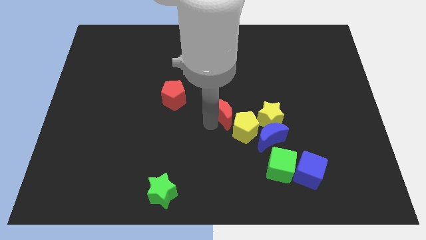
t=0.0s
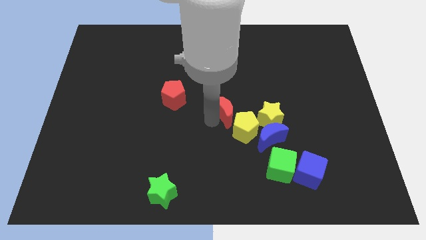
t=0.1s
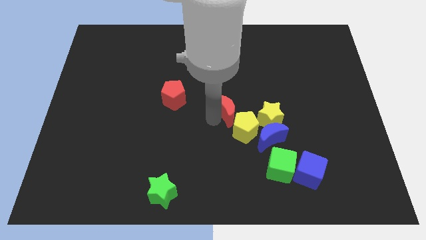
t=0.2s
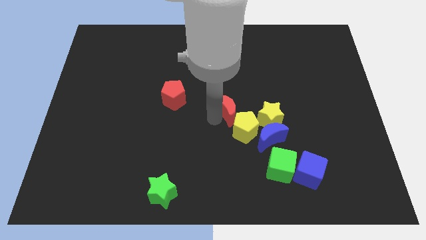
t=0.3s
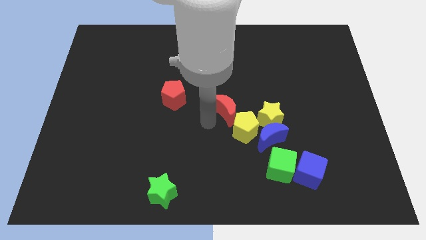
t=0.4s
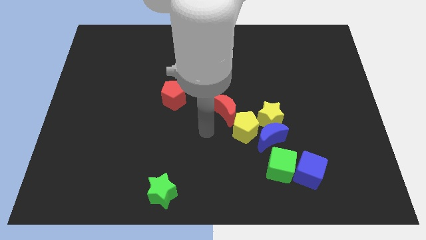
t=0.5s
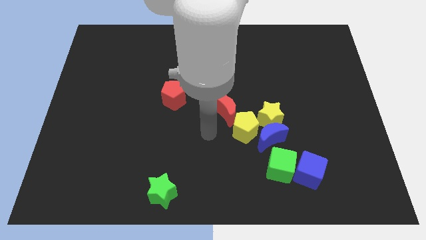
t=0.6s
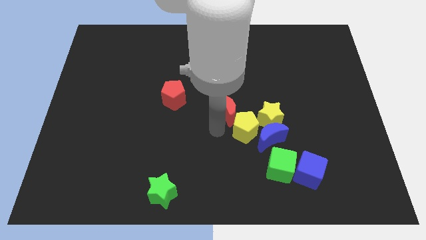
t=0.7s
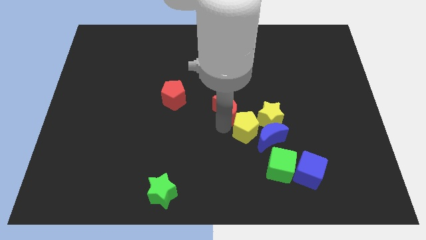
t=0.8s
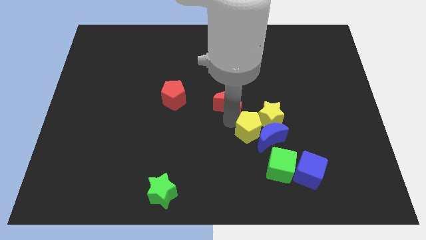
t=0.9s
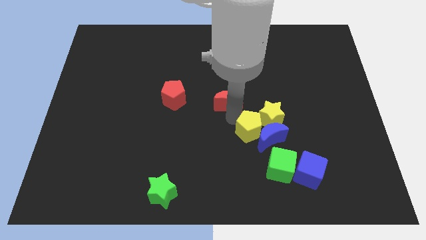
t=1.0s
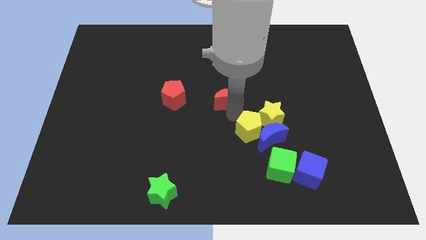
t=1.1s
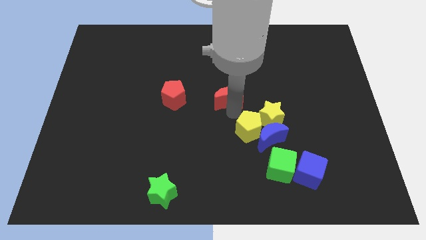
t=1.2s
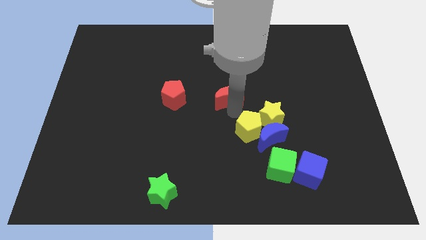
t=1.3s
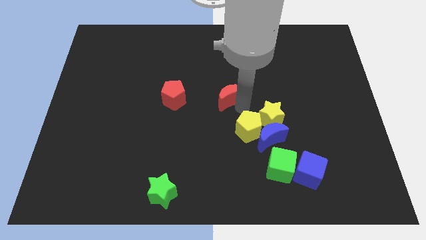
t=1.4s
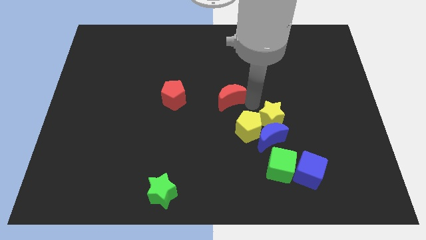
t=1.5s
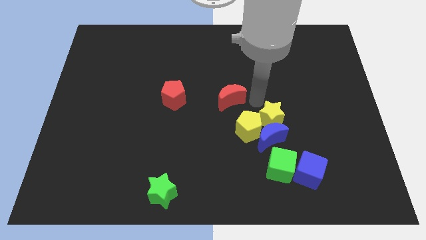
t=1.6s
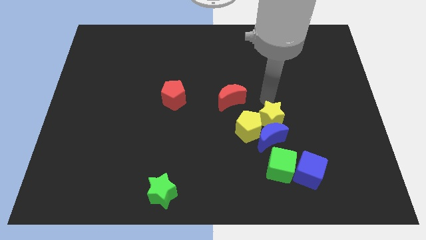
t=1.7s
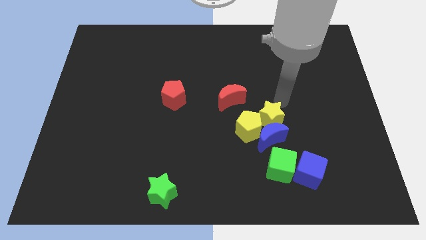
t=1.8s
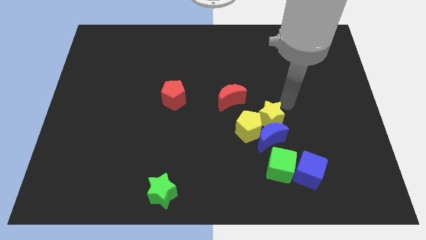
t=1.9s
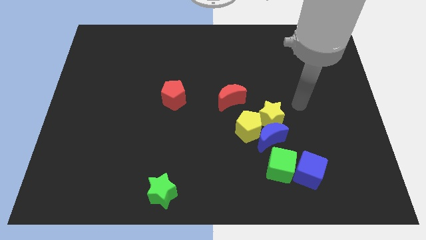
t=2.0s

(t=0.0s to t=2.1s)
slide red moon to the right of red pentagon

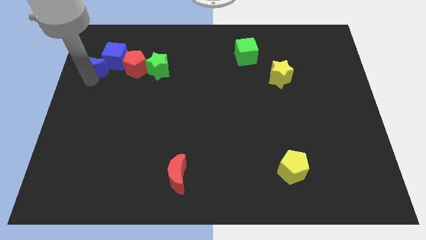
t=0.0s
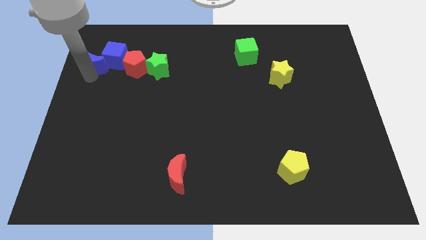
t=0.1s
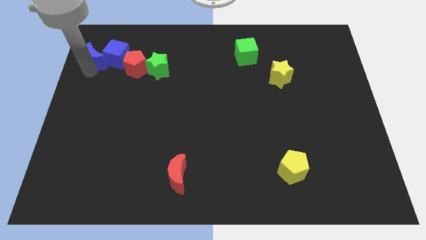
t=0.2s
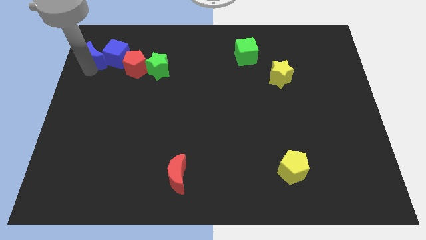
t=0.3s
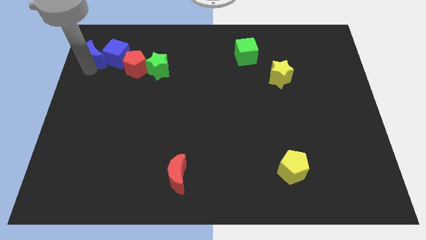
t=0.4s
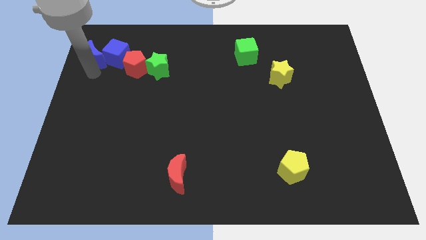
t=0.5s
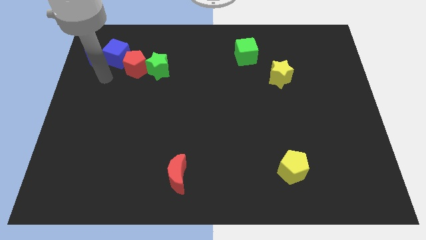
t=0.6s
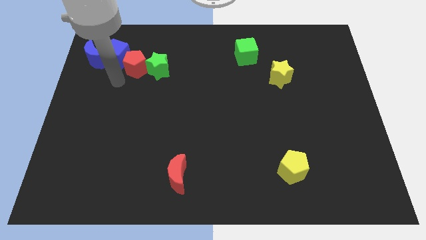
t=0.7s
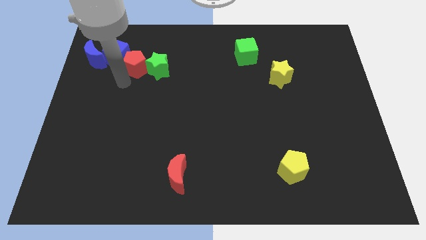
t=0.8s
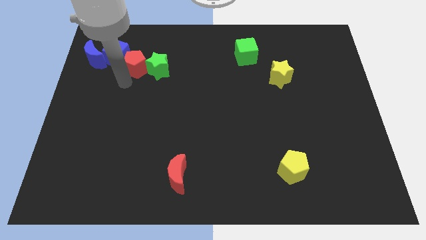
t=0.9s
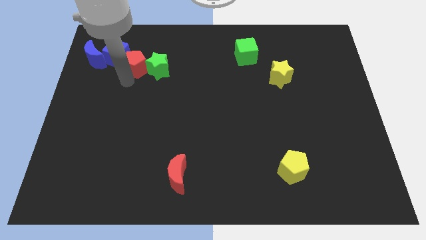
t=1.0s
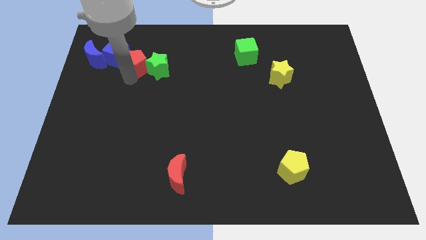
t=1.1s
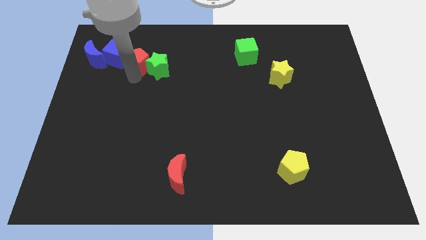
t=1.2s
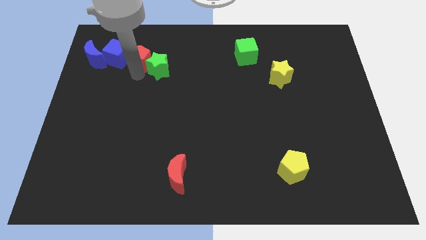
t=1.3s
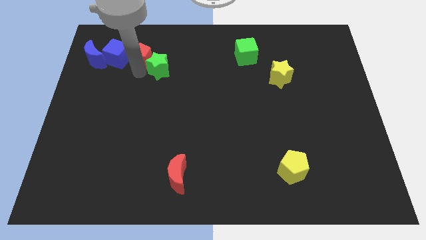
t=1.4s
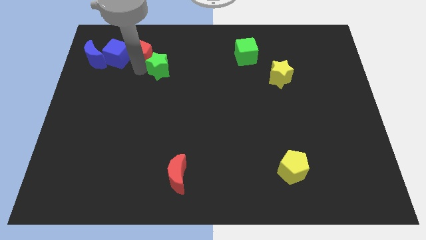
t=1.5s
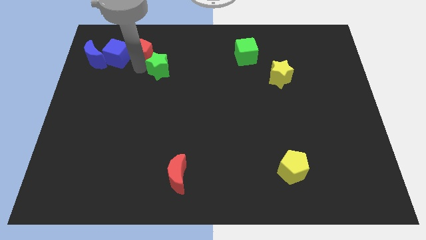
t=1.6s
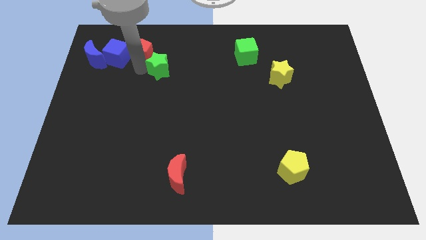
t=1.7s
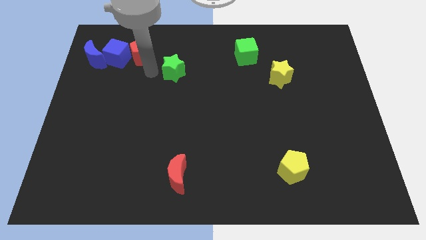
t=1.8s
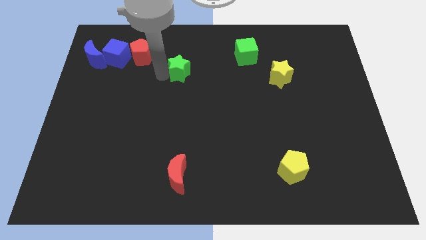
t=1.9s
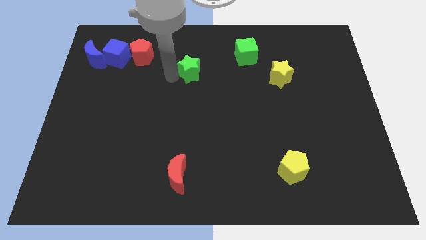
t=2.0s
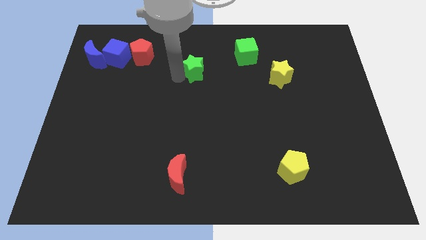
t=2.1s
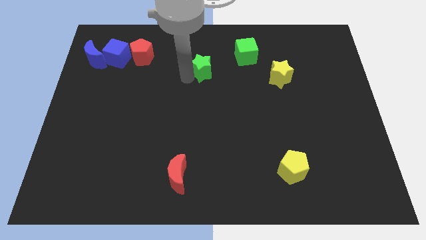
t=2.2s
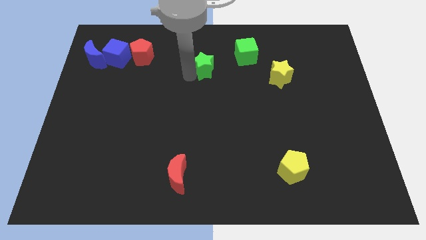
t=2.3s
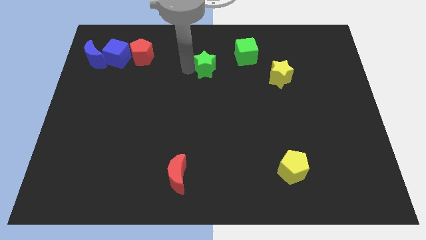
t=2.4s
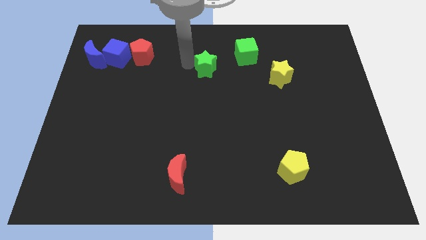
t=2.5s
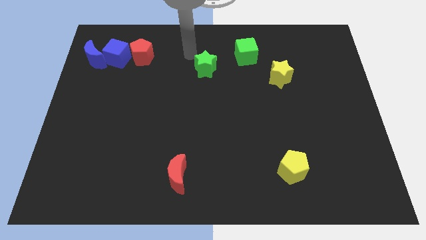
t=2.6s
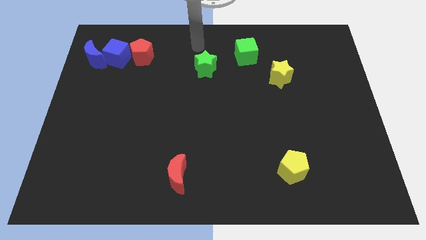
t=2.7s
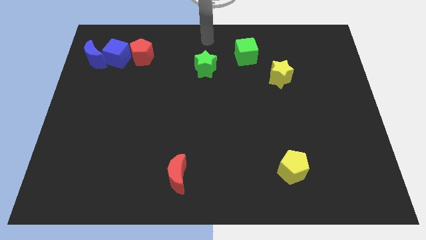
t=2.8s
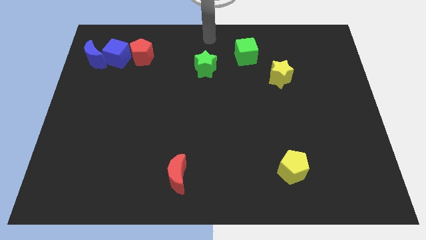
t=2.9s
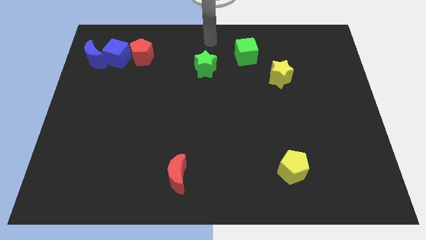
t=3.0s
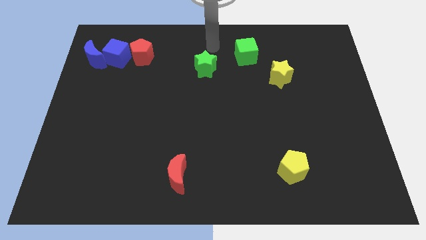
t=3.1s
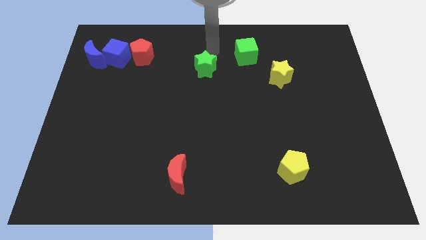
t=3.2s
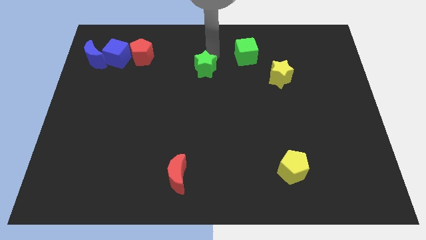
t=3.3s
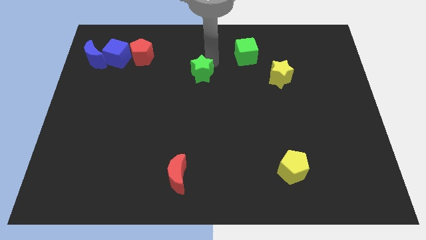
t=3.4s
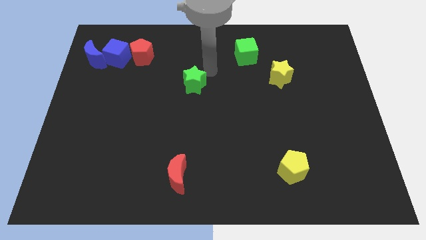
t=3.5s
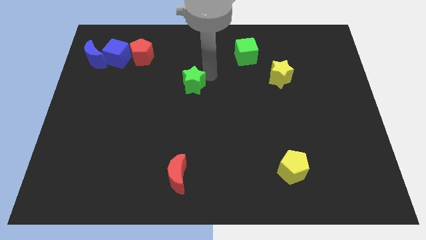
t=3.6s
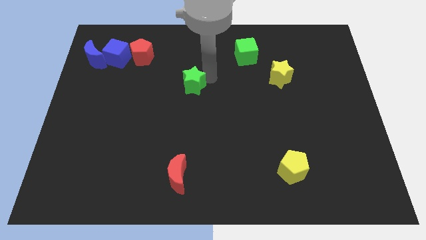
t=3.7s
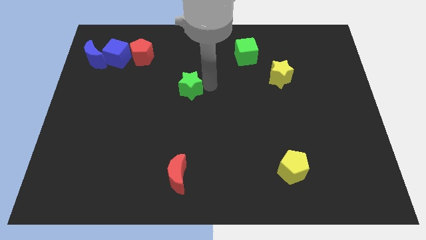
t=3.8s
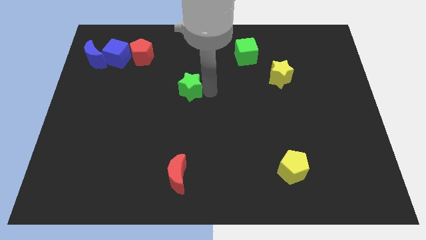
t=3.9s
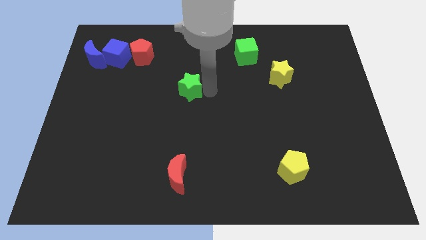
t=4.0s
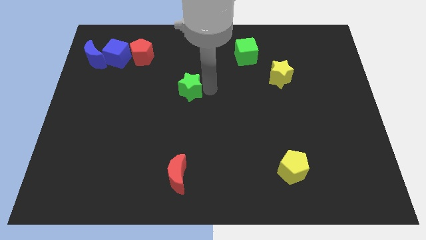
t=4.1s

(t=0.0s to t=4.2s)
place the green star at the center of the board

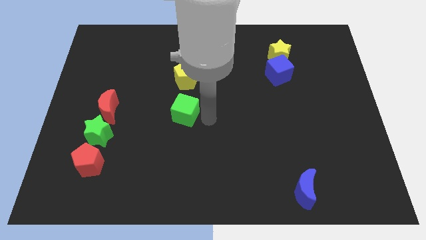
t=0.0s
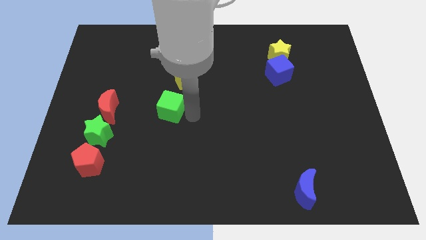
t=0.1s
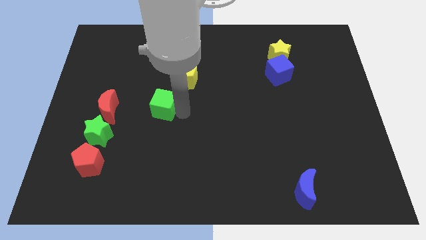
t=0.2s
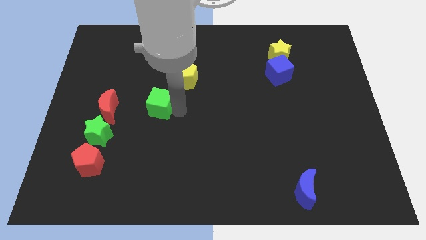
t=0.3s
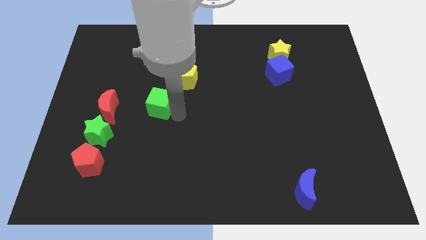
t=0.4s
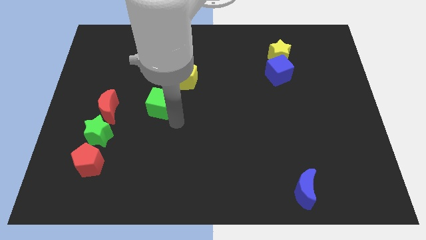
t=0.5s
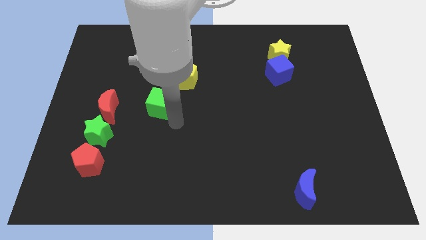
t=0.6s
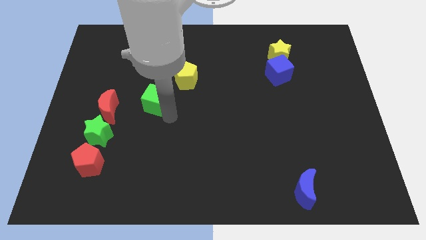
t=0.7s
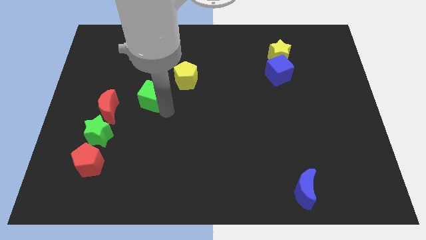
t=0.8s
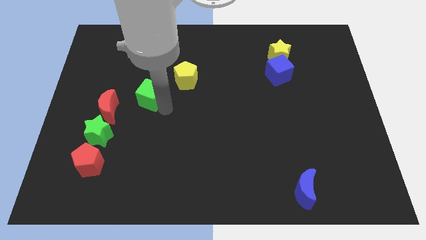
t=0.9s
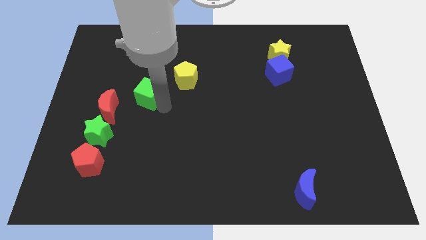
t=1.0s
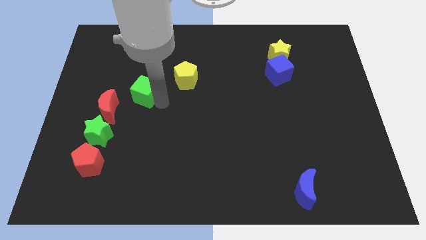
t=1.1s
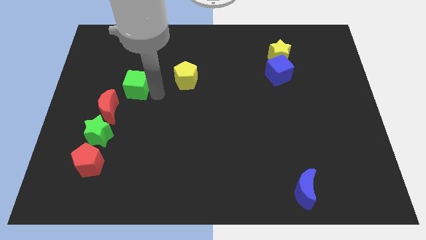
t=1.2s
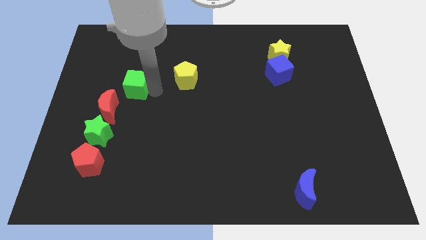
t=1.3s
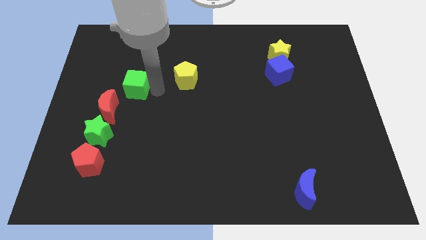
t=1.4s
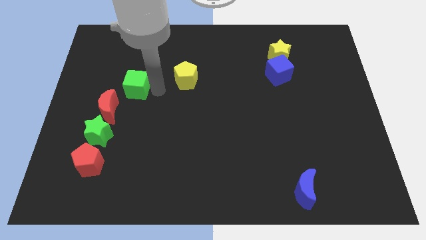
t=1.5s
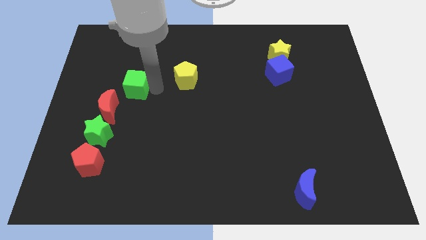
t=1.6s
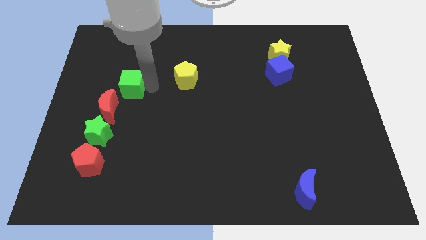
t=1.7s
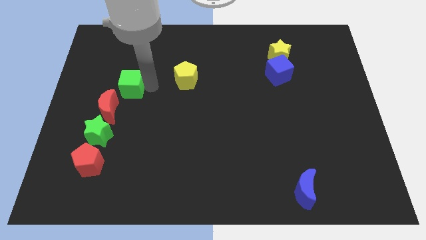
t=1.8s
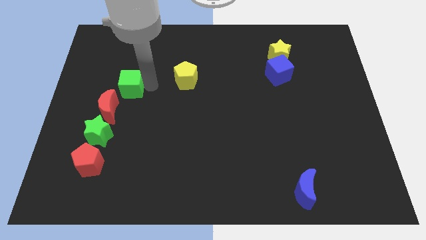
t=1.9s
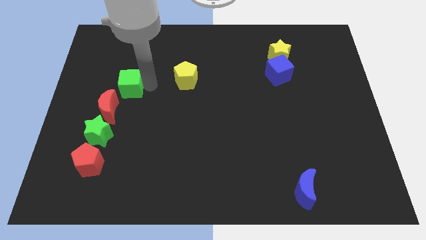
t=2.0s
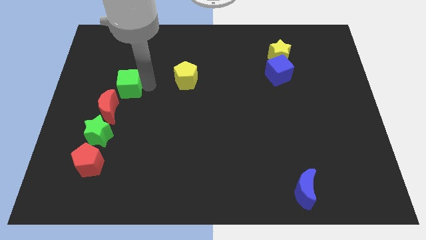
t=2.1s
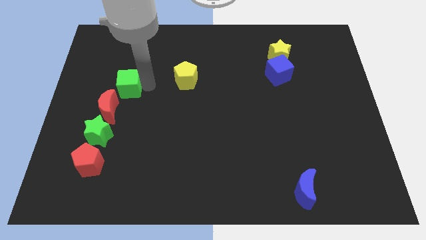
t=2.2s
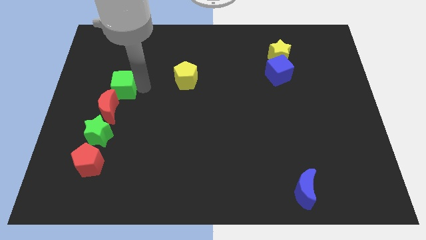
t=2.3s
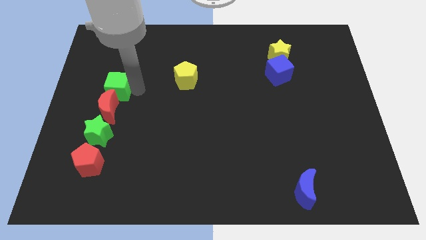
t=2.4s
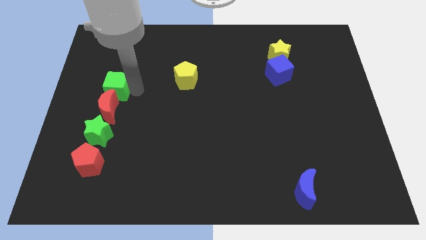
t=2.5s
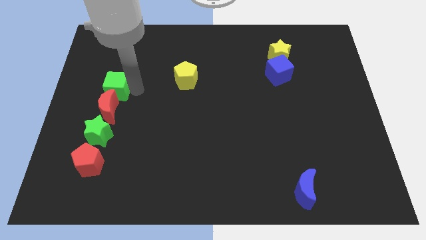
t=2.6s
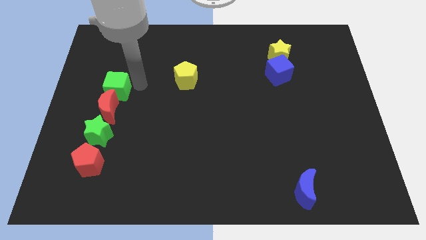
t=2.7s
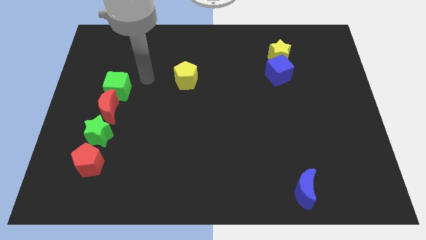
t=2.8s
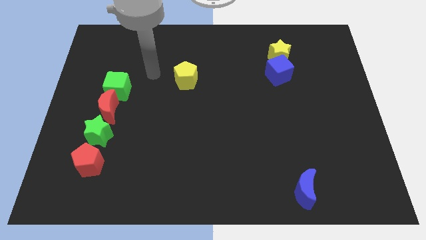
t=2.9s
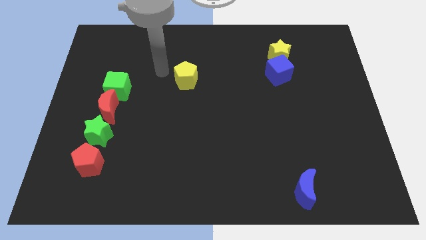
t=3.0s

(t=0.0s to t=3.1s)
drag the green cube to the top of the red moon
